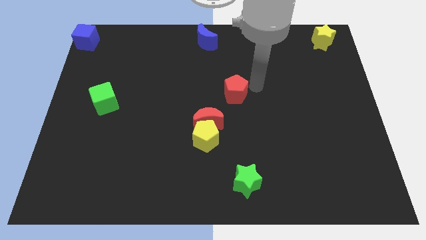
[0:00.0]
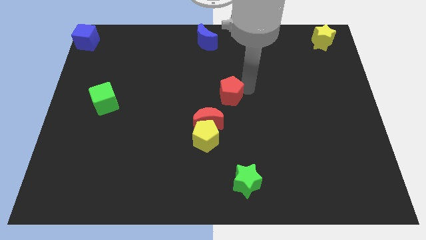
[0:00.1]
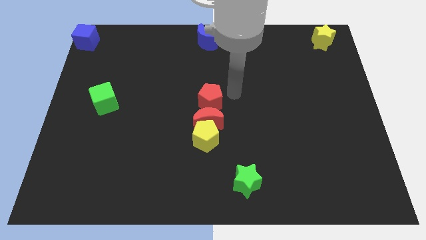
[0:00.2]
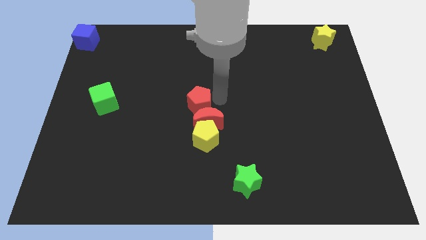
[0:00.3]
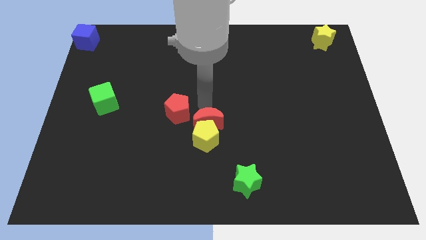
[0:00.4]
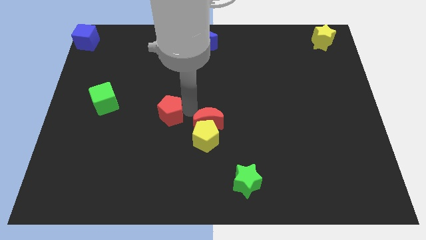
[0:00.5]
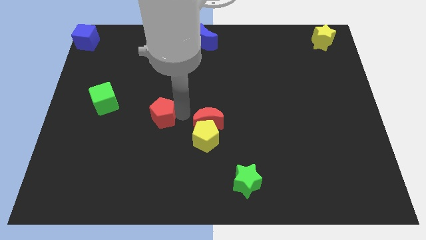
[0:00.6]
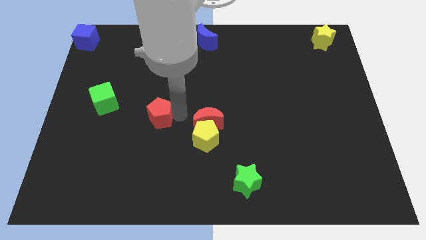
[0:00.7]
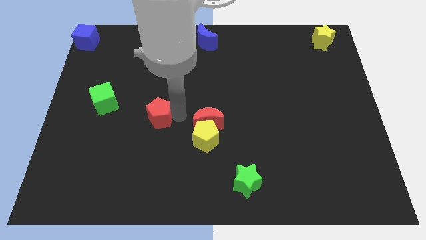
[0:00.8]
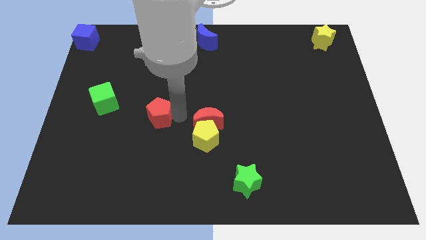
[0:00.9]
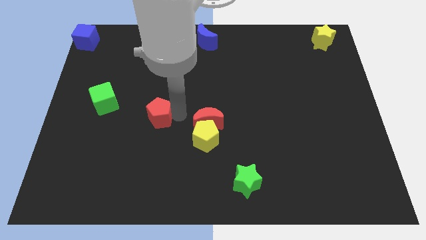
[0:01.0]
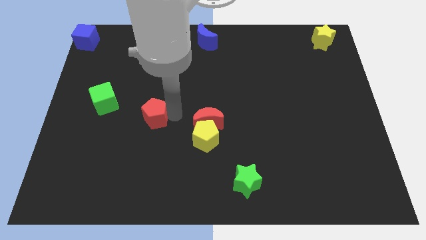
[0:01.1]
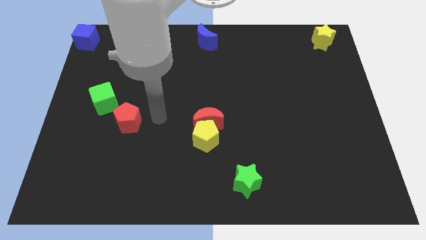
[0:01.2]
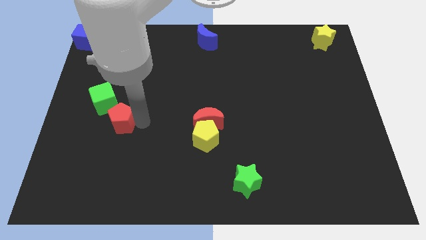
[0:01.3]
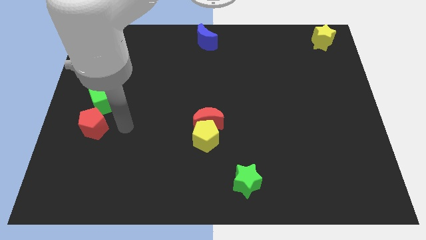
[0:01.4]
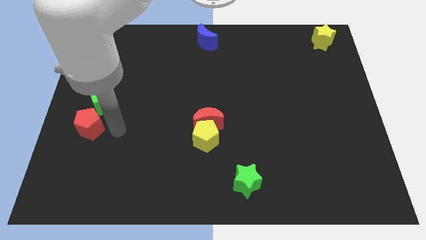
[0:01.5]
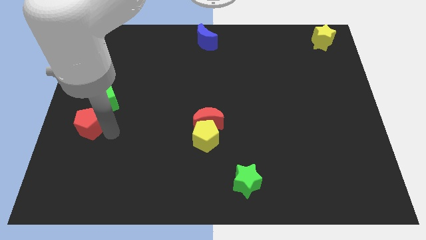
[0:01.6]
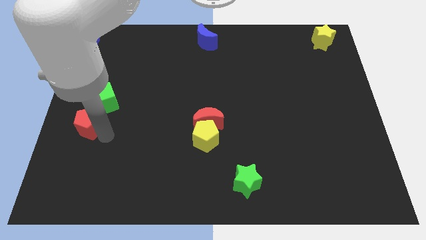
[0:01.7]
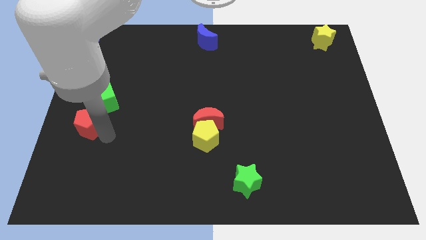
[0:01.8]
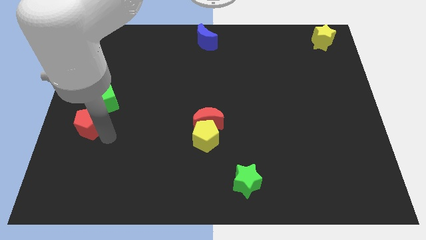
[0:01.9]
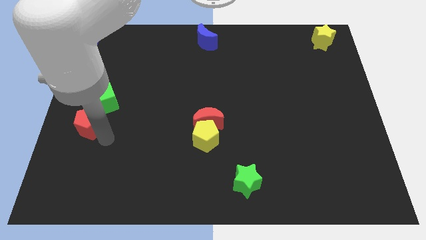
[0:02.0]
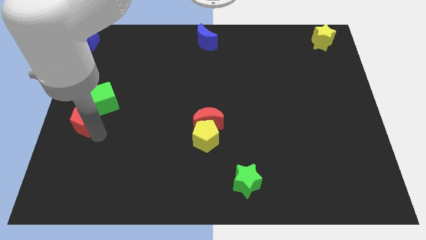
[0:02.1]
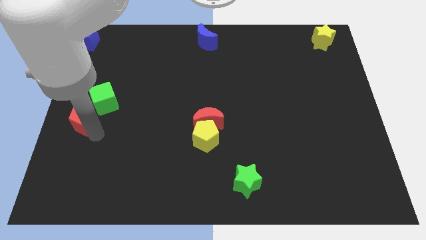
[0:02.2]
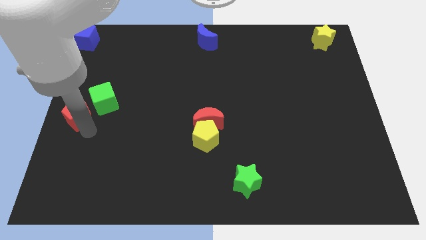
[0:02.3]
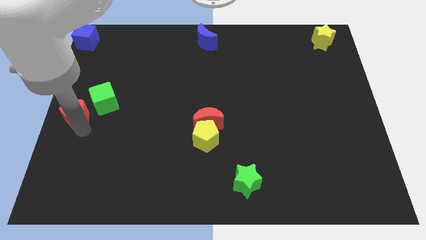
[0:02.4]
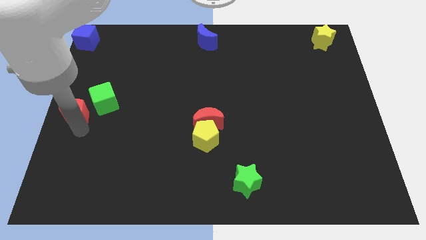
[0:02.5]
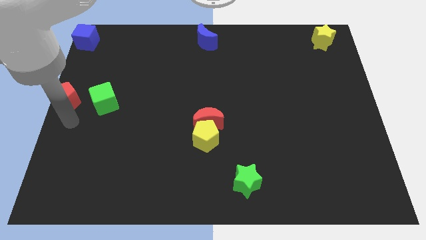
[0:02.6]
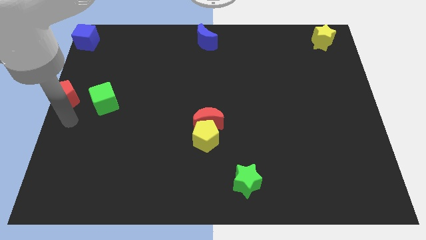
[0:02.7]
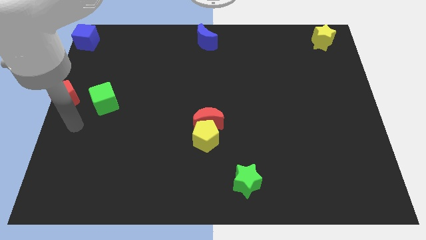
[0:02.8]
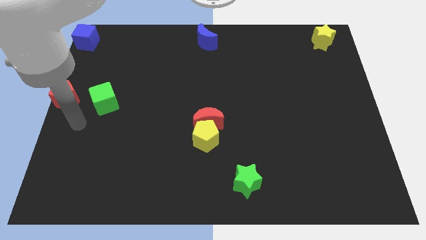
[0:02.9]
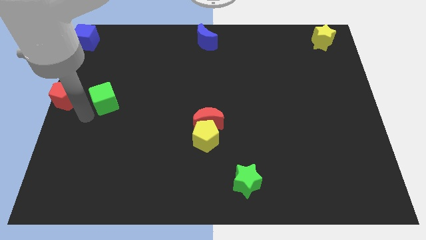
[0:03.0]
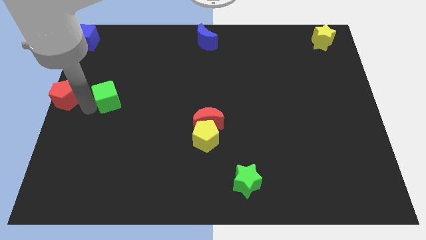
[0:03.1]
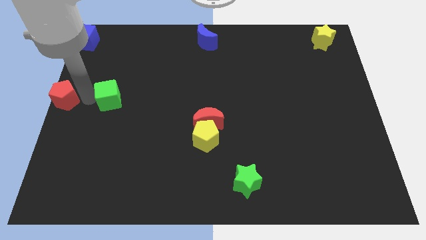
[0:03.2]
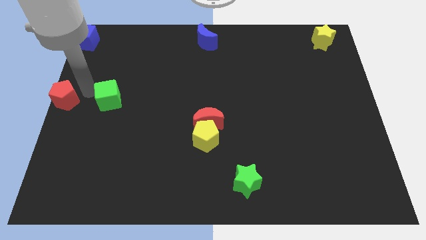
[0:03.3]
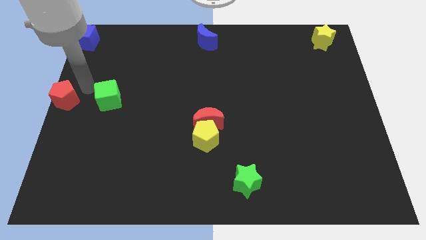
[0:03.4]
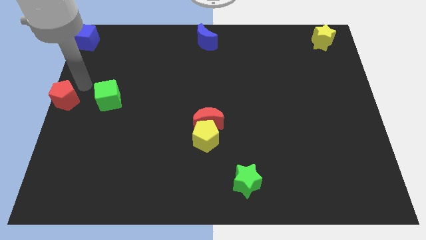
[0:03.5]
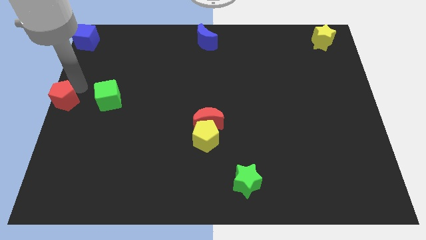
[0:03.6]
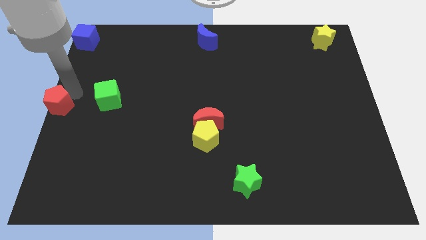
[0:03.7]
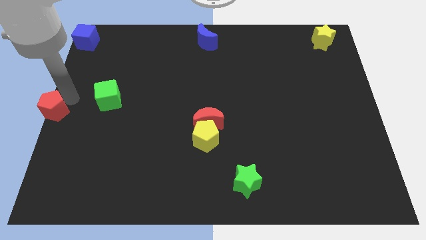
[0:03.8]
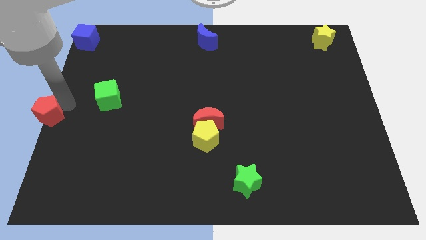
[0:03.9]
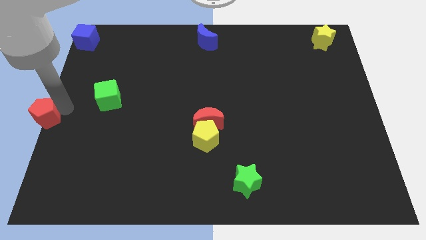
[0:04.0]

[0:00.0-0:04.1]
move the red pentagon to the left center of the board

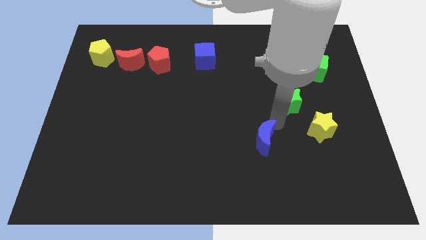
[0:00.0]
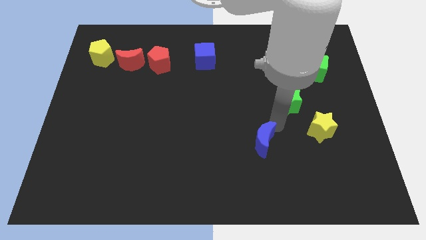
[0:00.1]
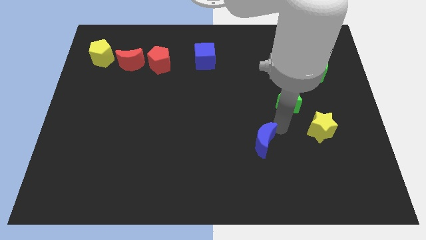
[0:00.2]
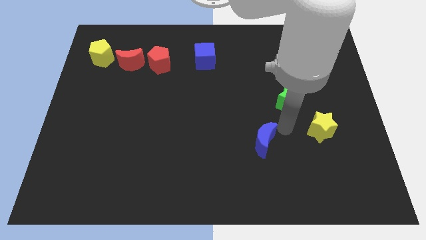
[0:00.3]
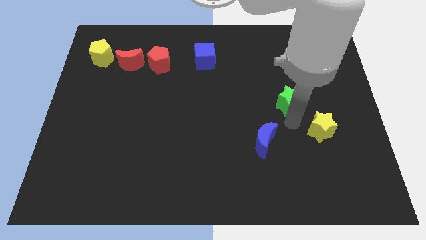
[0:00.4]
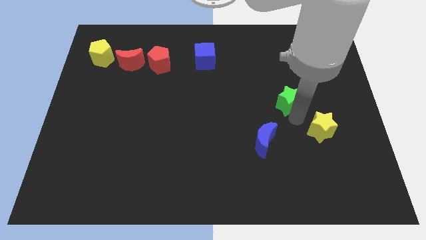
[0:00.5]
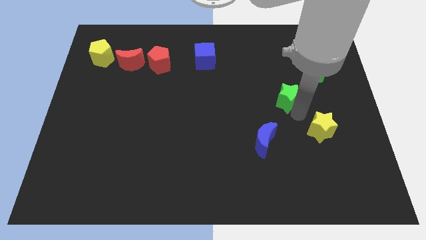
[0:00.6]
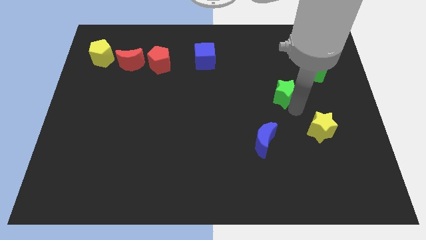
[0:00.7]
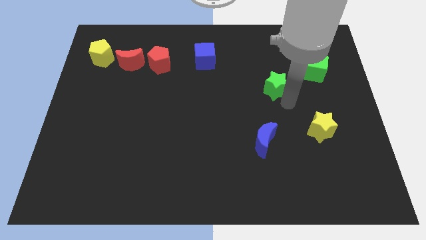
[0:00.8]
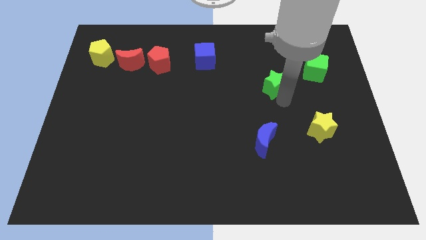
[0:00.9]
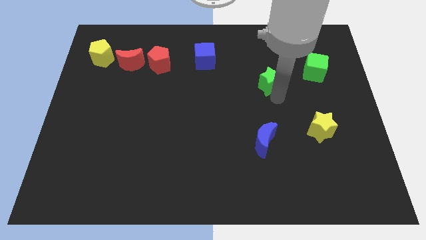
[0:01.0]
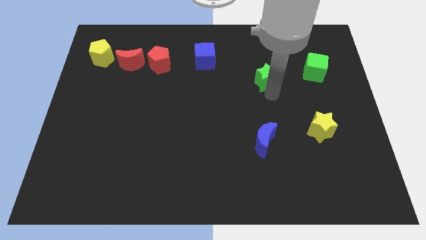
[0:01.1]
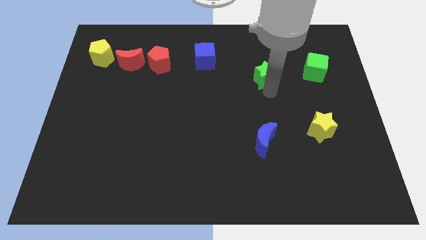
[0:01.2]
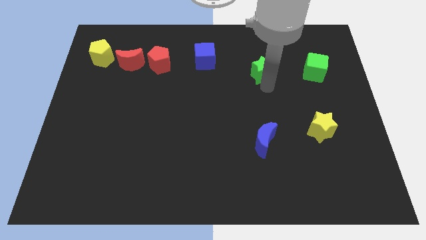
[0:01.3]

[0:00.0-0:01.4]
move the green star parallel to the left of the green cube

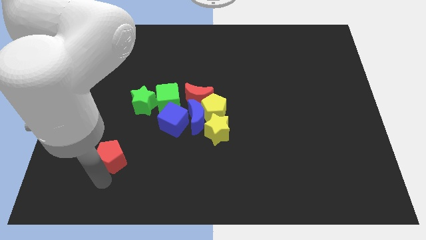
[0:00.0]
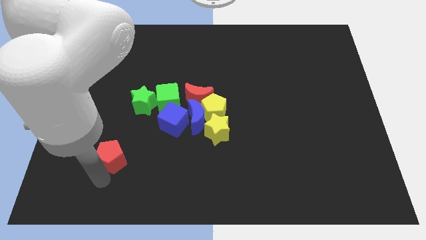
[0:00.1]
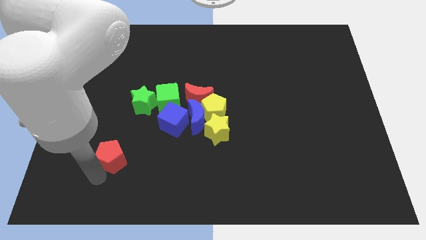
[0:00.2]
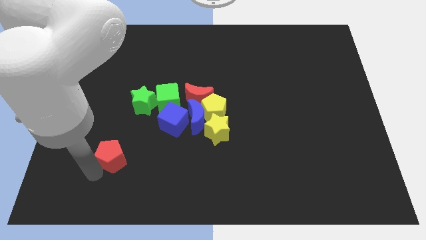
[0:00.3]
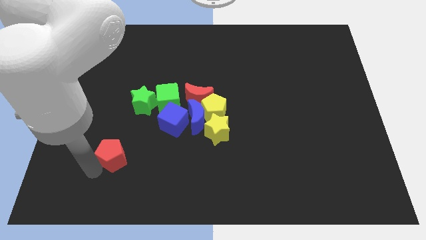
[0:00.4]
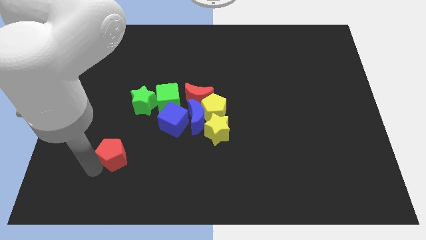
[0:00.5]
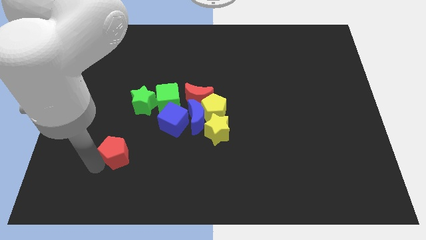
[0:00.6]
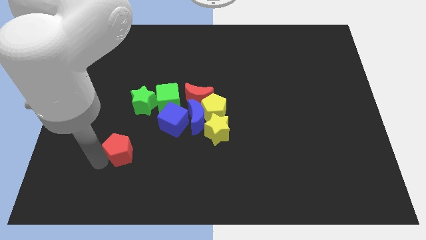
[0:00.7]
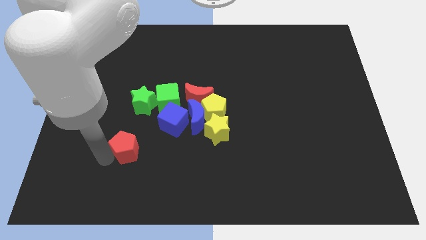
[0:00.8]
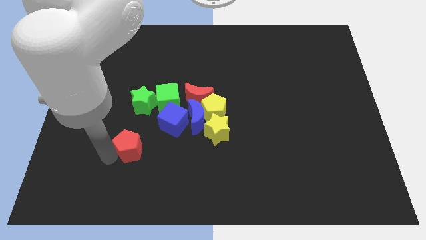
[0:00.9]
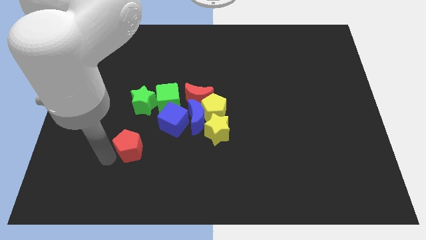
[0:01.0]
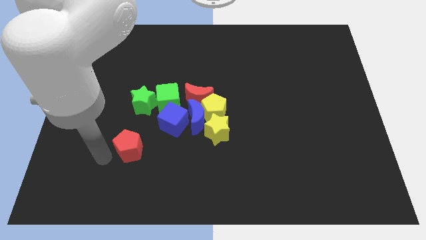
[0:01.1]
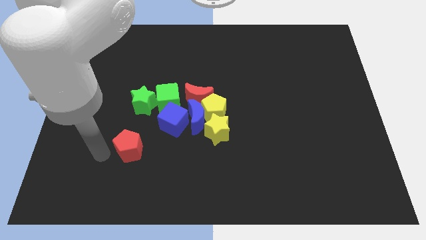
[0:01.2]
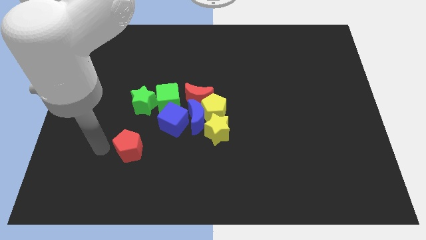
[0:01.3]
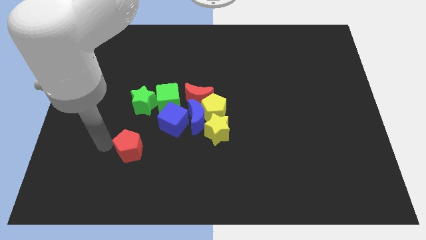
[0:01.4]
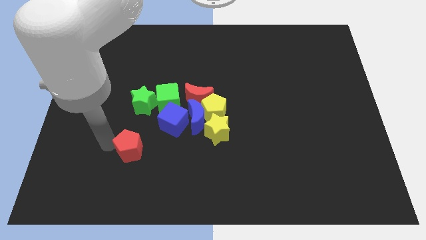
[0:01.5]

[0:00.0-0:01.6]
move the red pentagon towards the blue cube

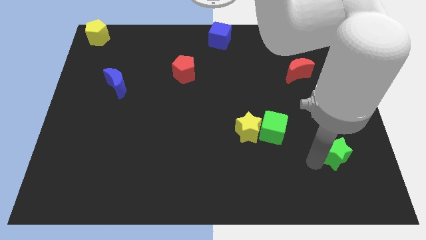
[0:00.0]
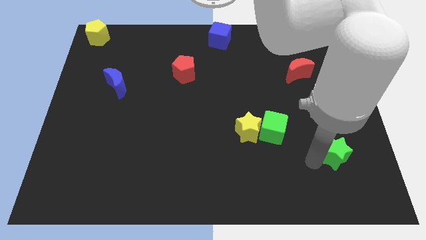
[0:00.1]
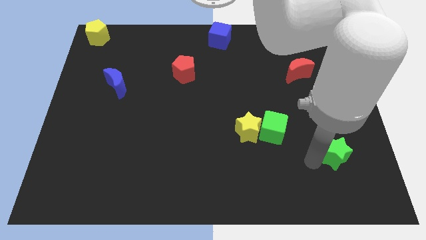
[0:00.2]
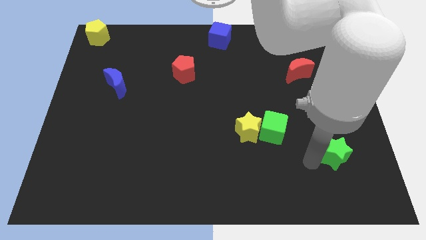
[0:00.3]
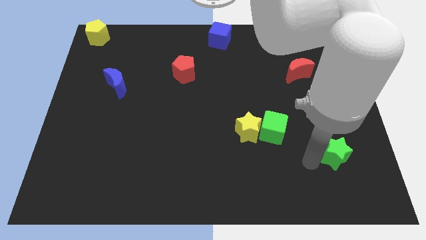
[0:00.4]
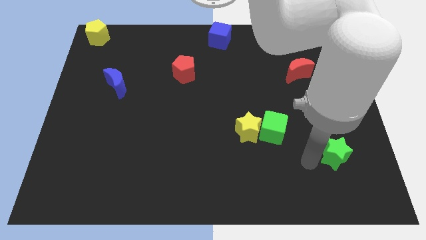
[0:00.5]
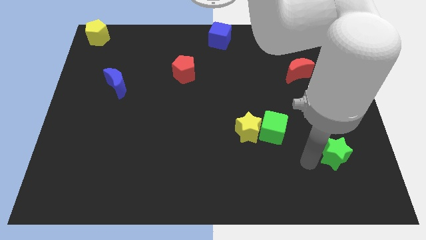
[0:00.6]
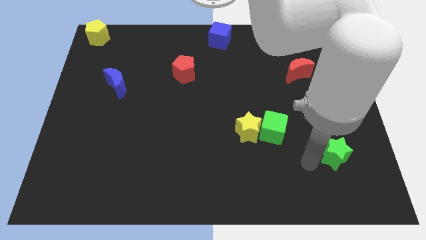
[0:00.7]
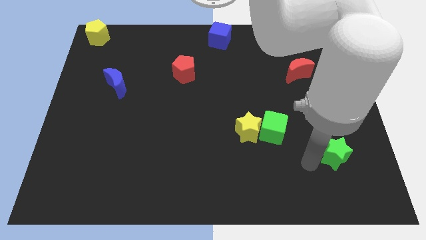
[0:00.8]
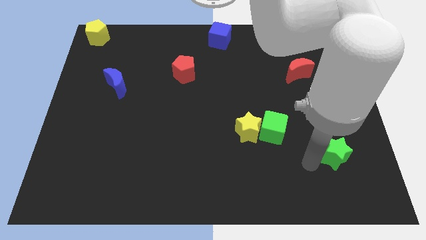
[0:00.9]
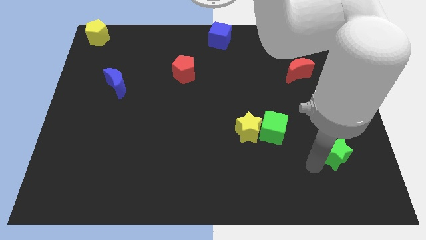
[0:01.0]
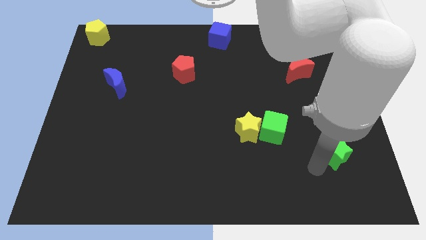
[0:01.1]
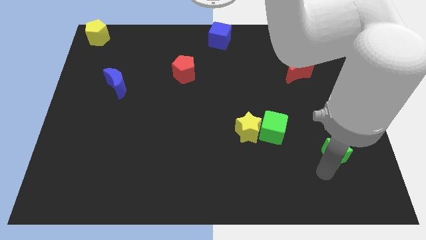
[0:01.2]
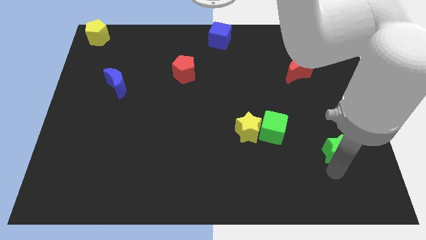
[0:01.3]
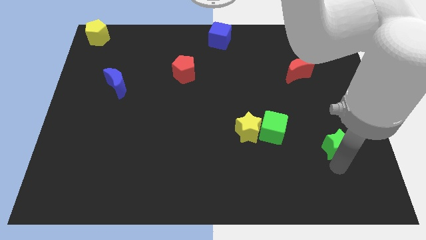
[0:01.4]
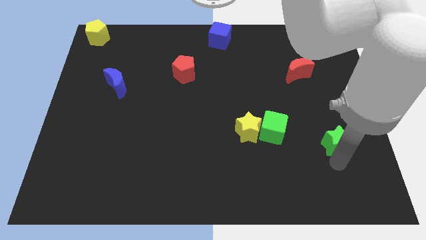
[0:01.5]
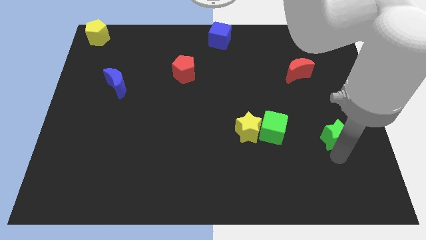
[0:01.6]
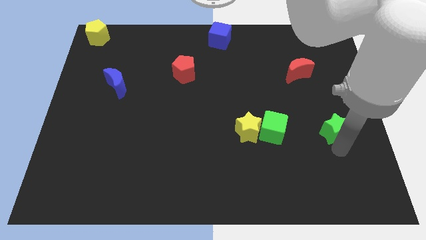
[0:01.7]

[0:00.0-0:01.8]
push the green star to the right of green cube

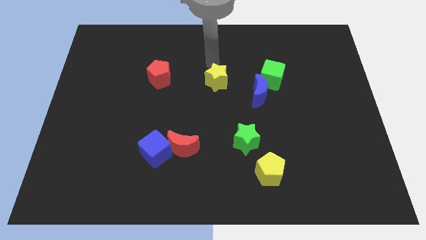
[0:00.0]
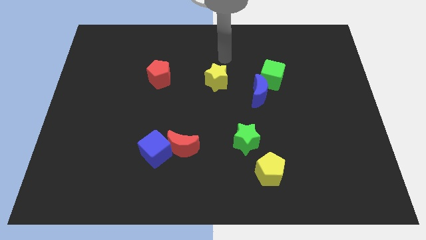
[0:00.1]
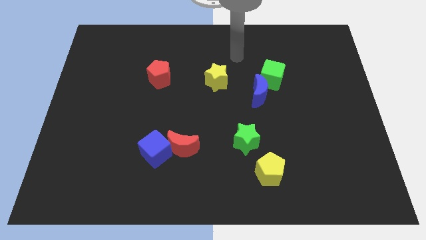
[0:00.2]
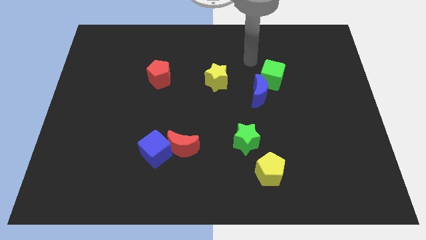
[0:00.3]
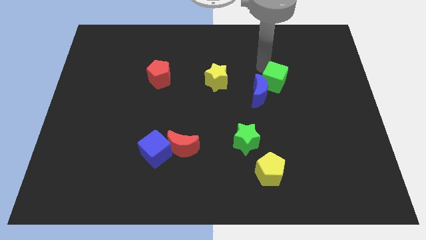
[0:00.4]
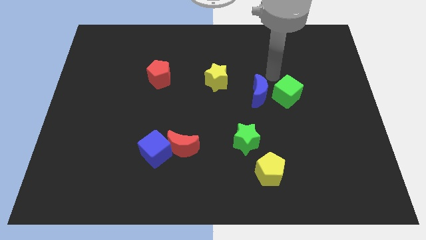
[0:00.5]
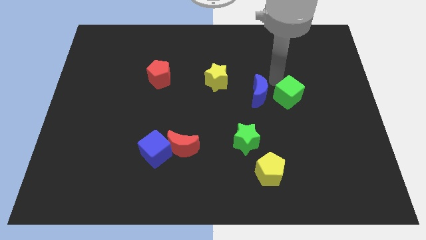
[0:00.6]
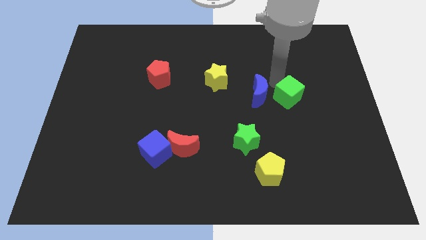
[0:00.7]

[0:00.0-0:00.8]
place the green cube to the right side of blue moon
